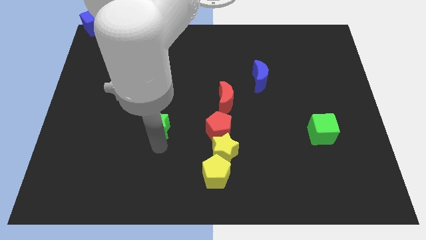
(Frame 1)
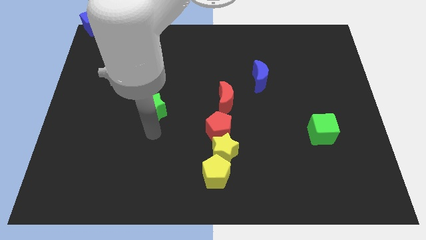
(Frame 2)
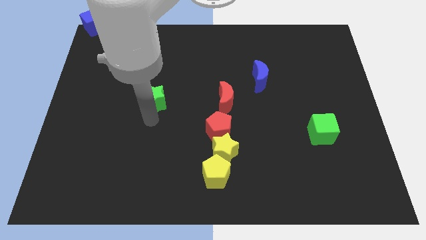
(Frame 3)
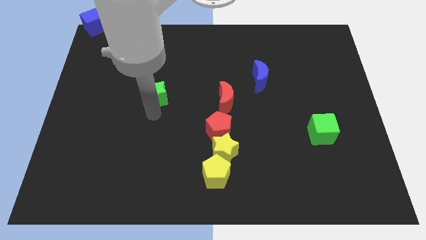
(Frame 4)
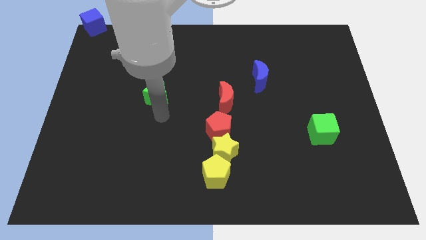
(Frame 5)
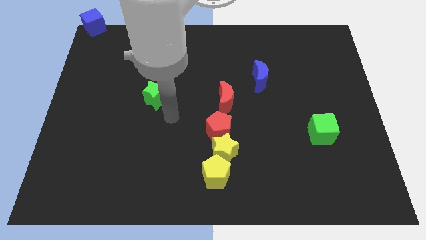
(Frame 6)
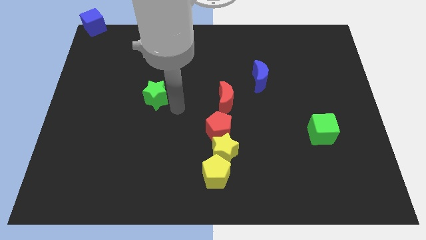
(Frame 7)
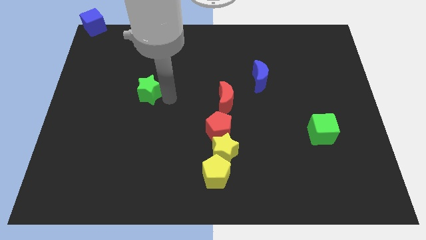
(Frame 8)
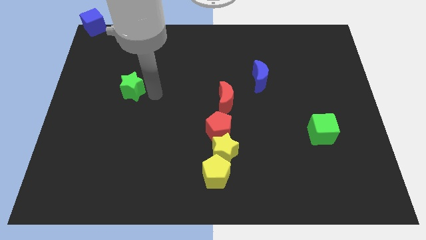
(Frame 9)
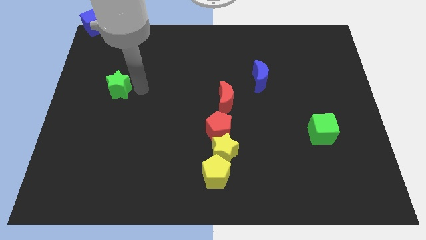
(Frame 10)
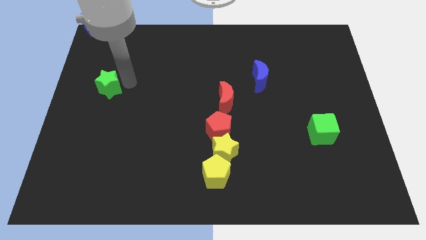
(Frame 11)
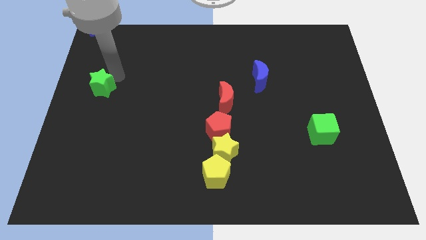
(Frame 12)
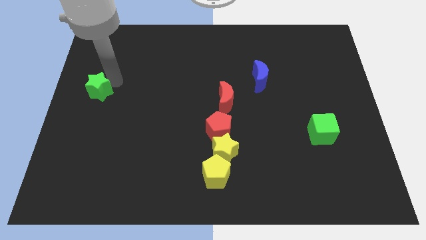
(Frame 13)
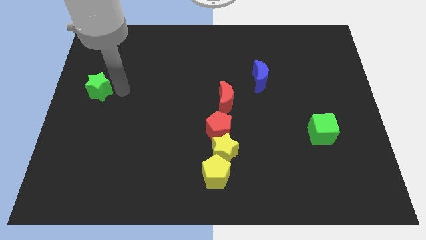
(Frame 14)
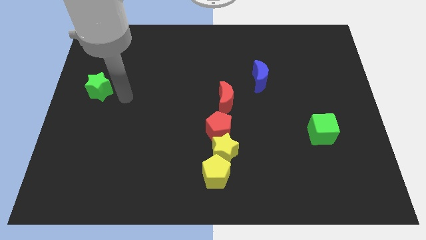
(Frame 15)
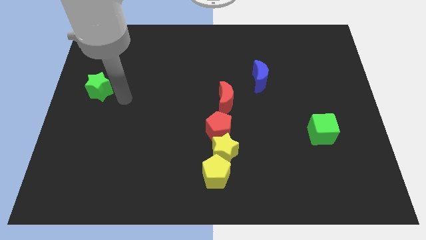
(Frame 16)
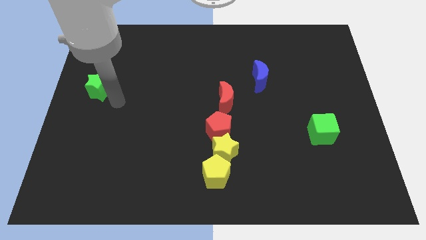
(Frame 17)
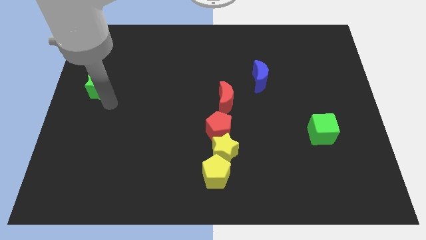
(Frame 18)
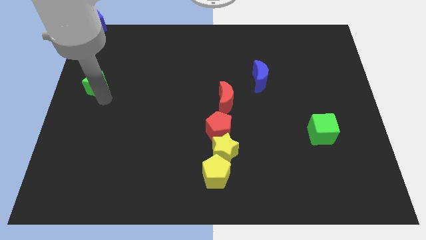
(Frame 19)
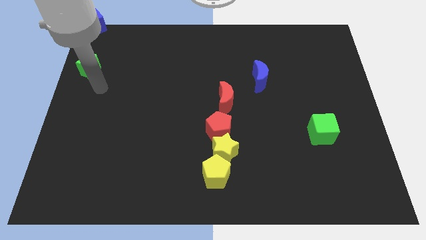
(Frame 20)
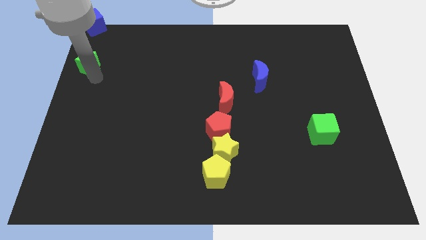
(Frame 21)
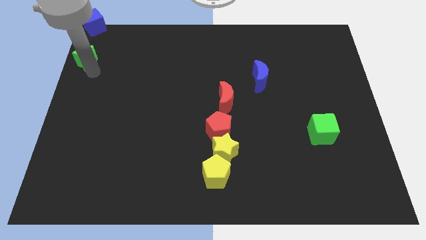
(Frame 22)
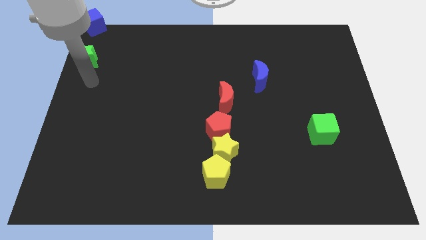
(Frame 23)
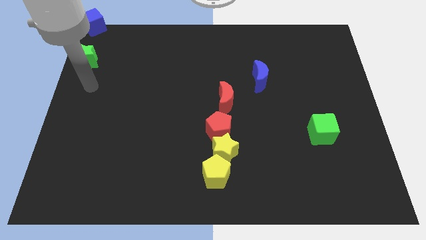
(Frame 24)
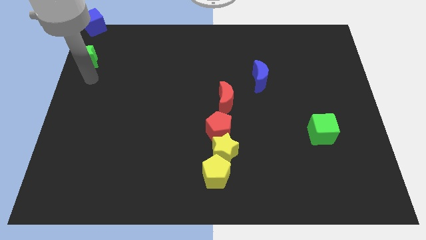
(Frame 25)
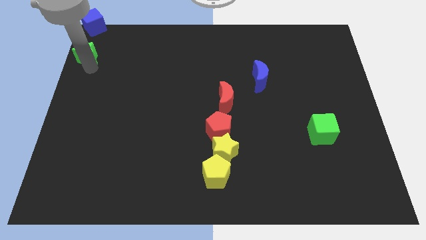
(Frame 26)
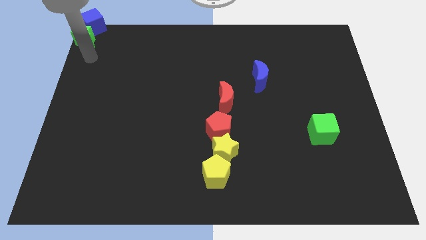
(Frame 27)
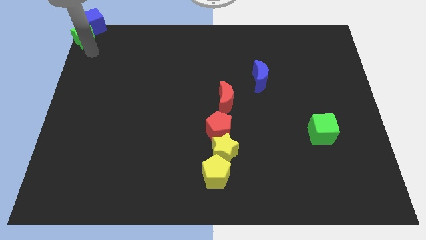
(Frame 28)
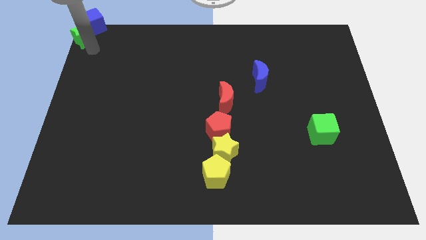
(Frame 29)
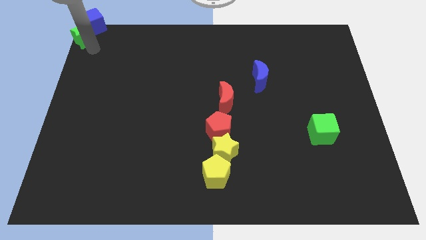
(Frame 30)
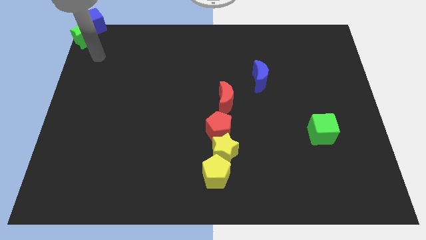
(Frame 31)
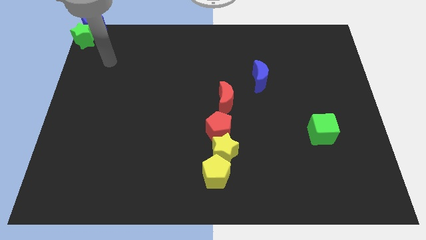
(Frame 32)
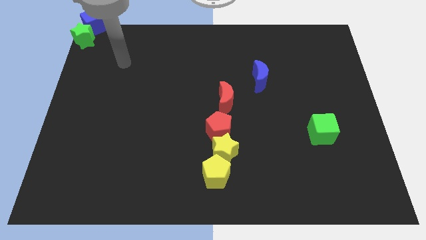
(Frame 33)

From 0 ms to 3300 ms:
push the green star into blue cube

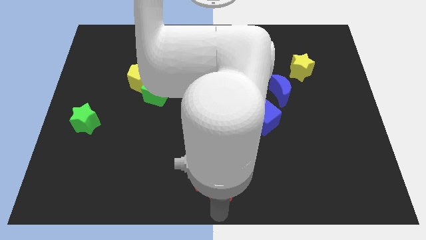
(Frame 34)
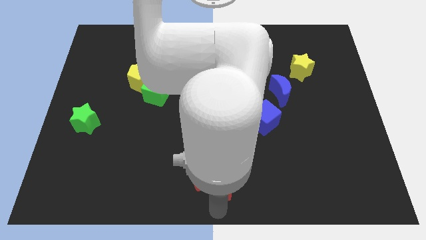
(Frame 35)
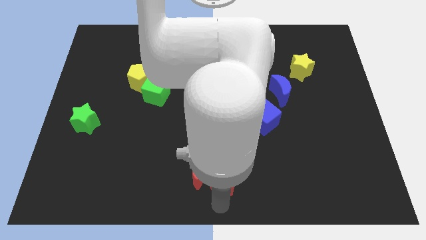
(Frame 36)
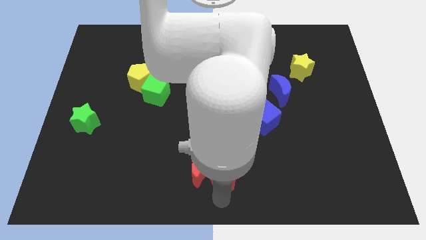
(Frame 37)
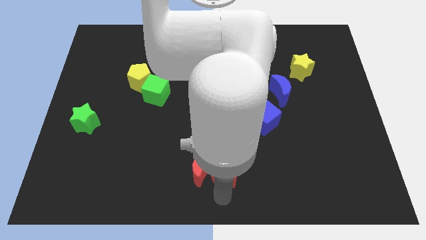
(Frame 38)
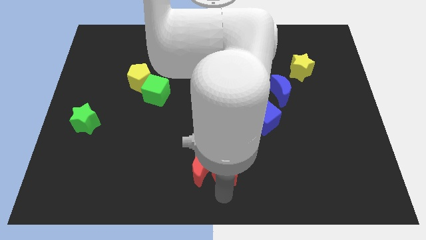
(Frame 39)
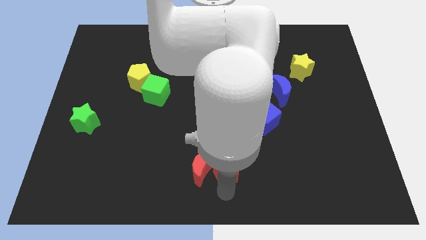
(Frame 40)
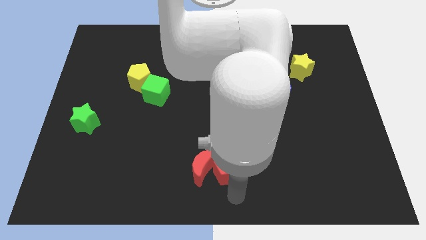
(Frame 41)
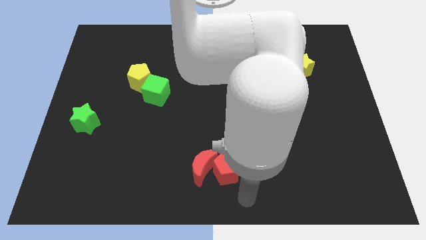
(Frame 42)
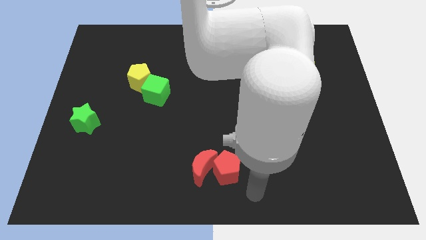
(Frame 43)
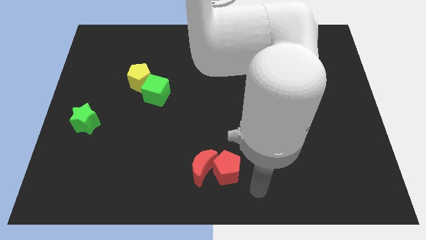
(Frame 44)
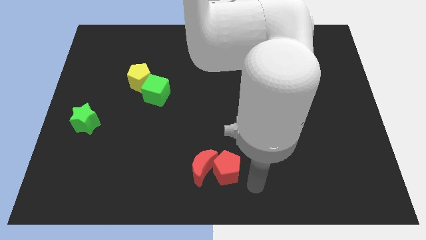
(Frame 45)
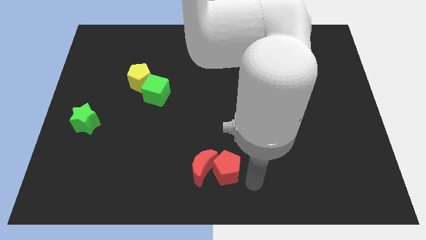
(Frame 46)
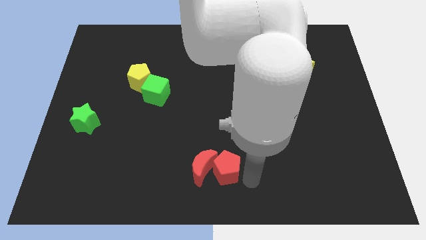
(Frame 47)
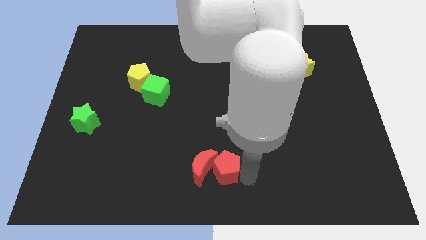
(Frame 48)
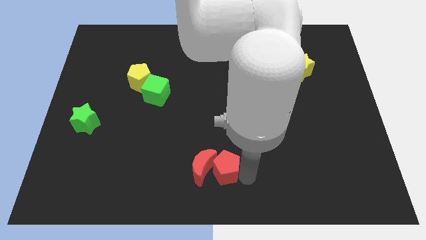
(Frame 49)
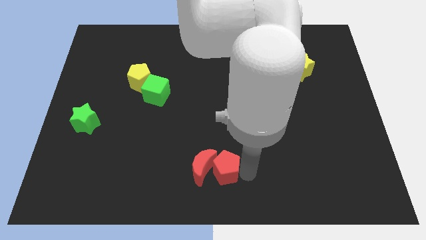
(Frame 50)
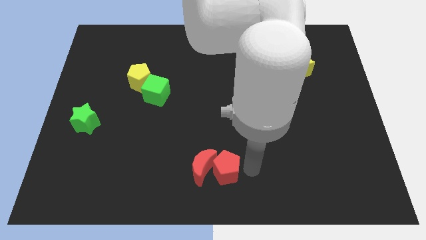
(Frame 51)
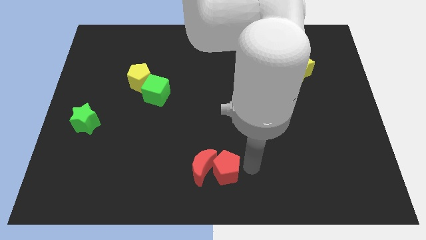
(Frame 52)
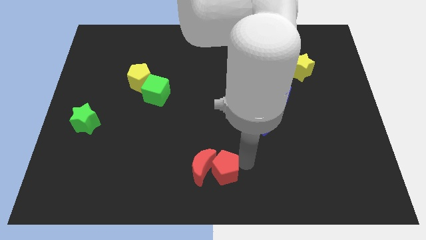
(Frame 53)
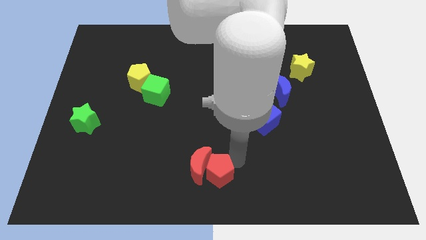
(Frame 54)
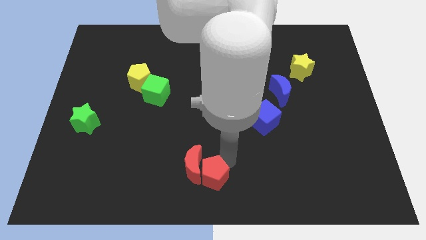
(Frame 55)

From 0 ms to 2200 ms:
place red pentagon to the right of red moon

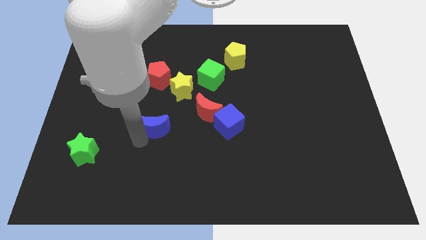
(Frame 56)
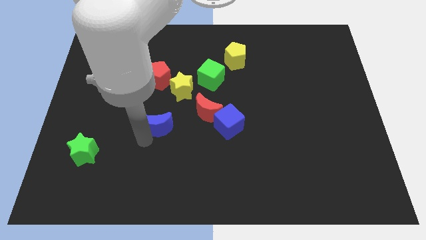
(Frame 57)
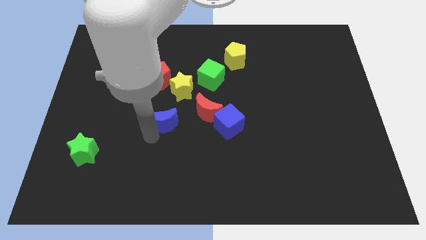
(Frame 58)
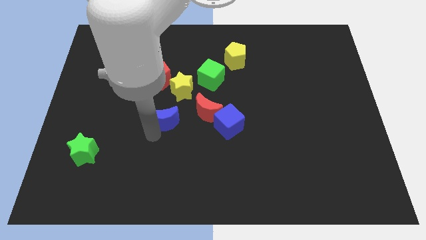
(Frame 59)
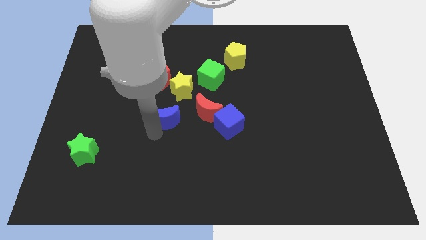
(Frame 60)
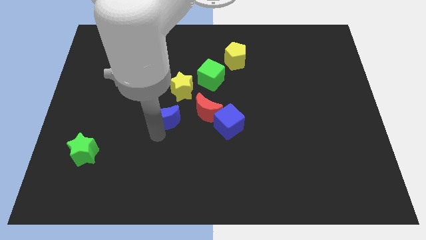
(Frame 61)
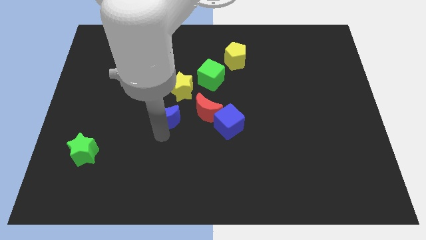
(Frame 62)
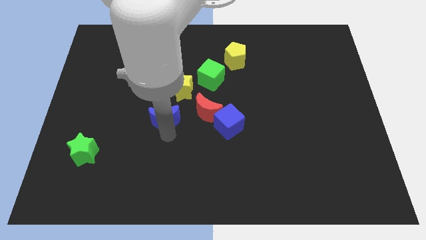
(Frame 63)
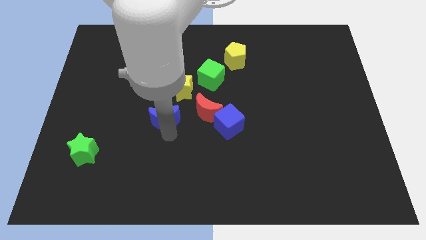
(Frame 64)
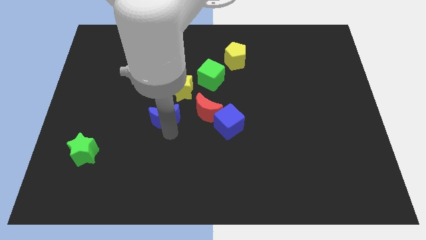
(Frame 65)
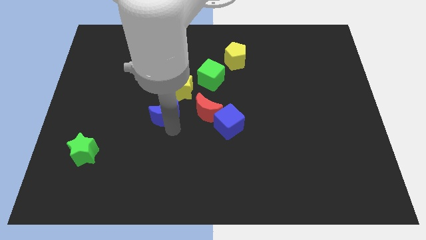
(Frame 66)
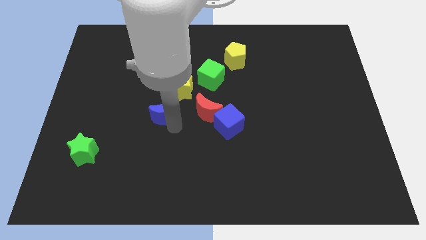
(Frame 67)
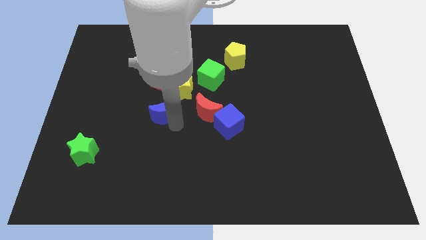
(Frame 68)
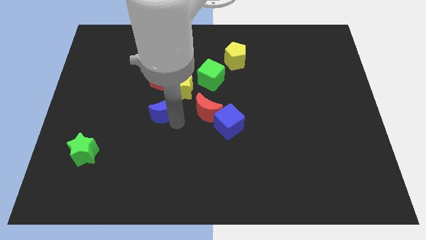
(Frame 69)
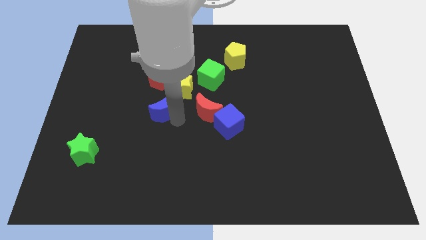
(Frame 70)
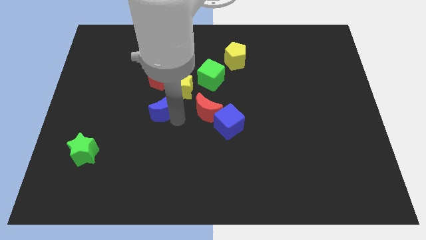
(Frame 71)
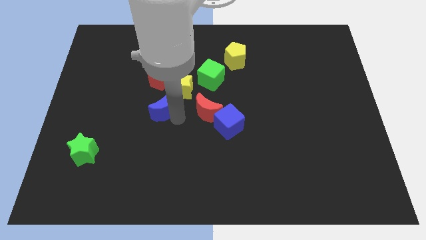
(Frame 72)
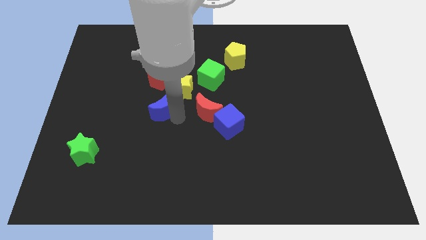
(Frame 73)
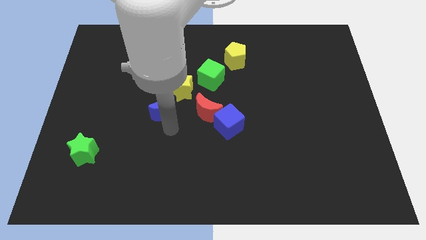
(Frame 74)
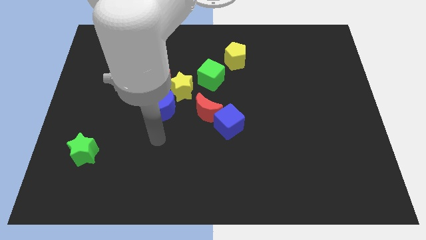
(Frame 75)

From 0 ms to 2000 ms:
move the blue moon towards the yellow star

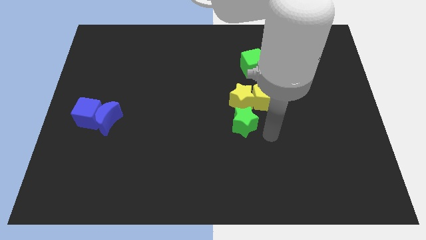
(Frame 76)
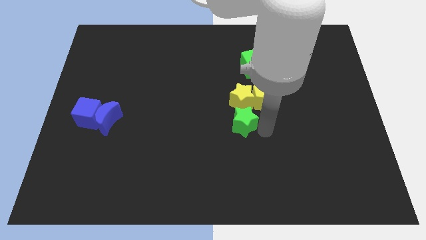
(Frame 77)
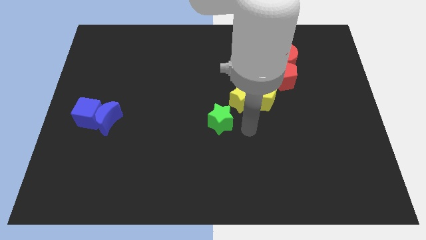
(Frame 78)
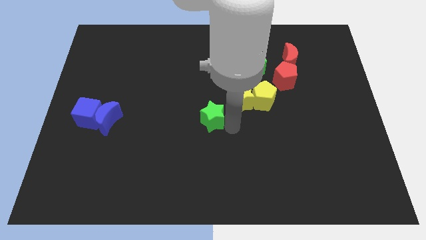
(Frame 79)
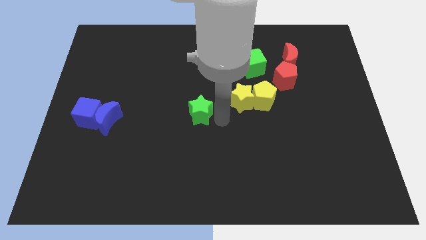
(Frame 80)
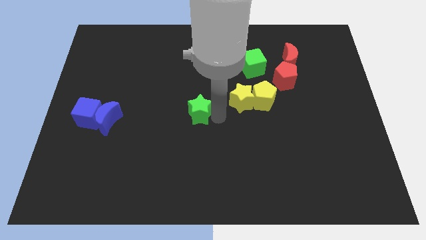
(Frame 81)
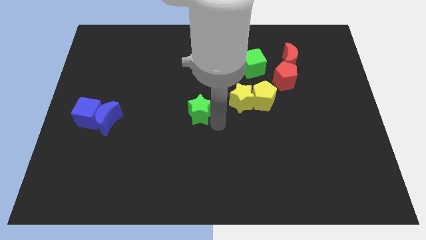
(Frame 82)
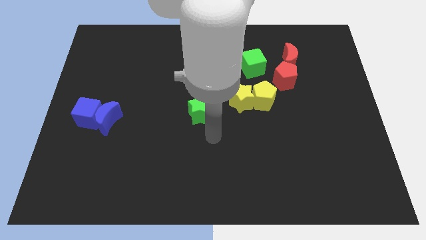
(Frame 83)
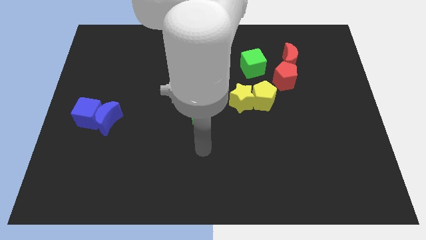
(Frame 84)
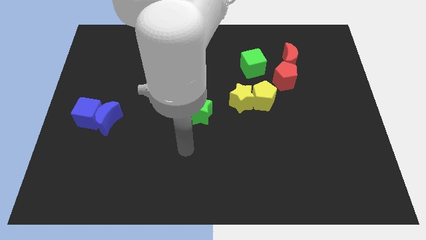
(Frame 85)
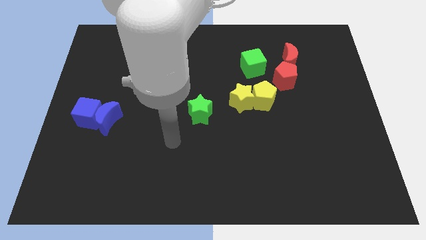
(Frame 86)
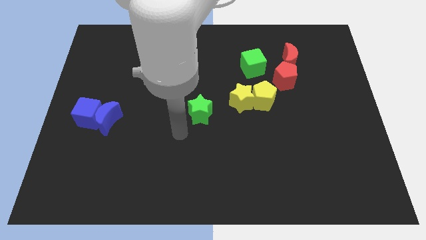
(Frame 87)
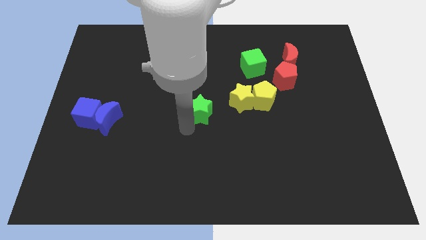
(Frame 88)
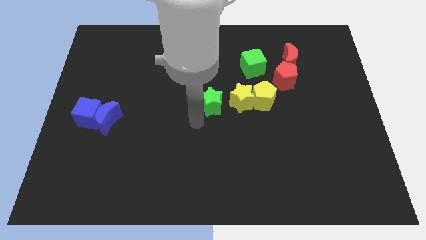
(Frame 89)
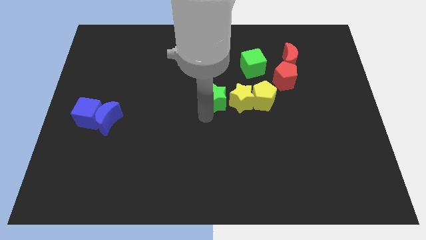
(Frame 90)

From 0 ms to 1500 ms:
move the green star to the left of the yellow star
